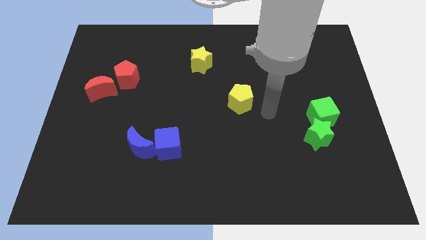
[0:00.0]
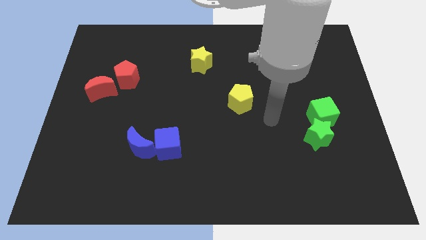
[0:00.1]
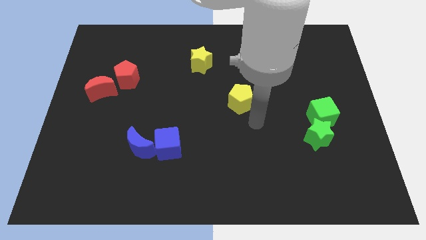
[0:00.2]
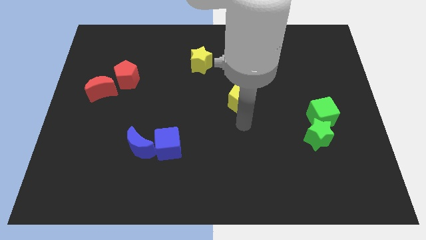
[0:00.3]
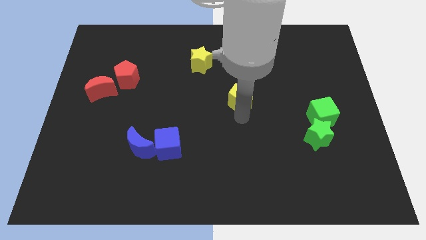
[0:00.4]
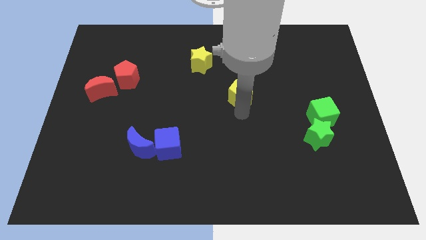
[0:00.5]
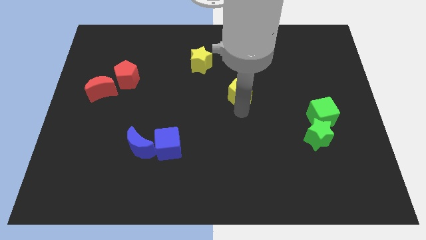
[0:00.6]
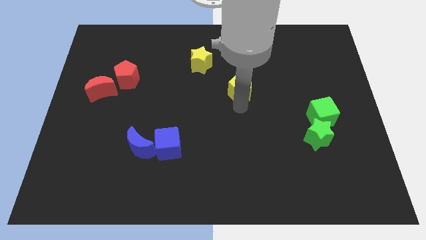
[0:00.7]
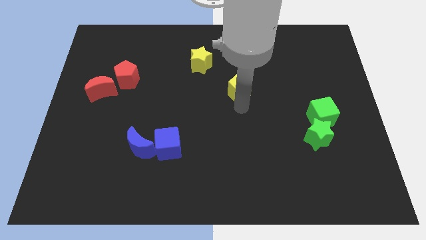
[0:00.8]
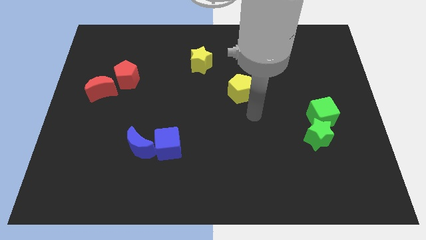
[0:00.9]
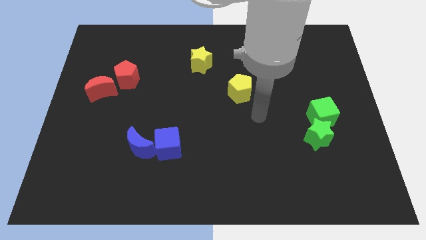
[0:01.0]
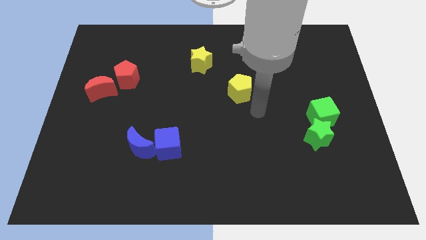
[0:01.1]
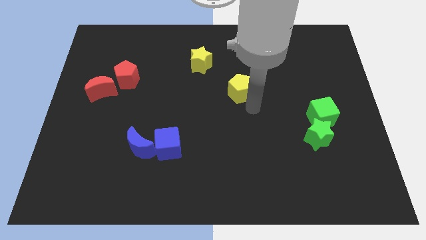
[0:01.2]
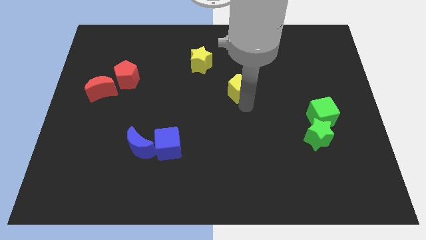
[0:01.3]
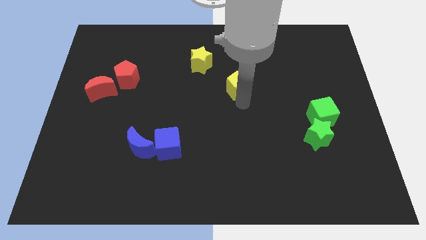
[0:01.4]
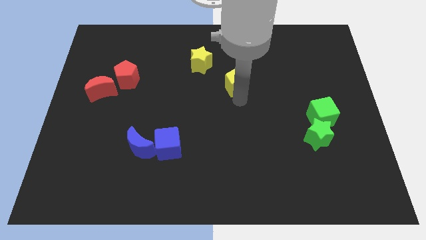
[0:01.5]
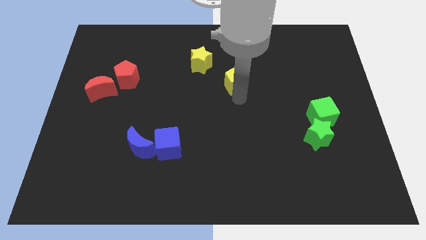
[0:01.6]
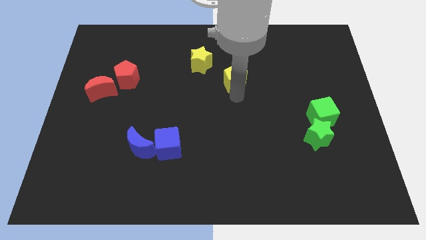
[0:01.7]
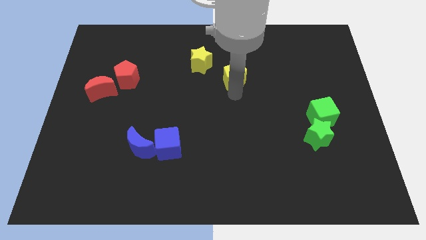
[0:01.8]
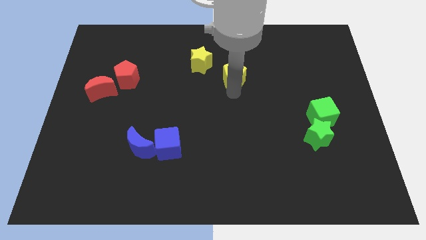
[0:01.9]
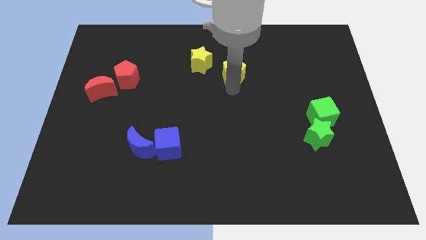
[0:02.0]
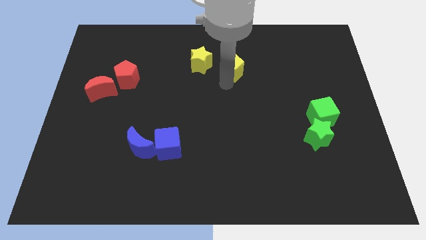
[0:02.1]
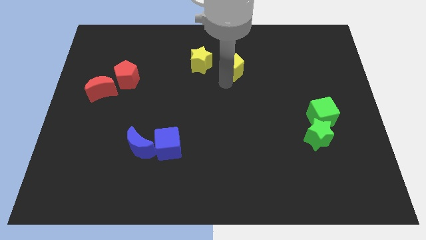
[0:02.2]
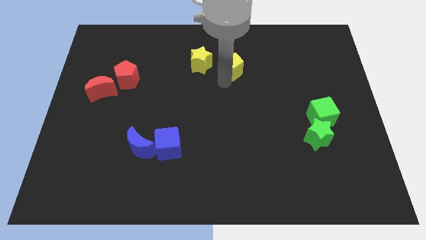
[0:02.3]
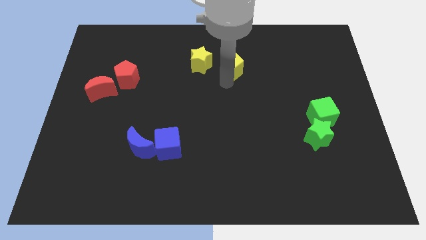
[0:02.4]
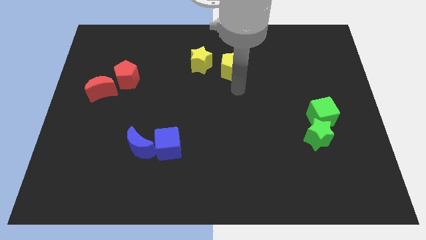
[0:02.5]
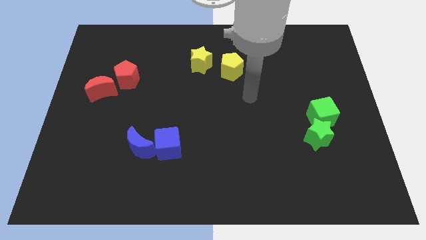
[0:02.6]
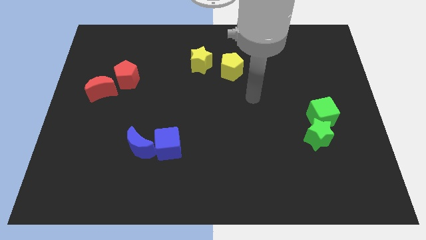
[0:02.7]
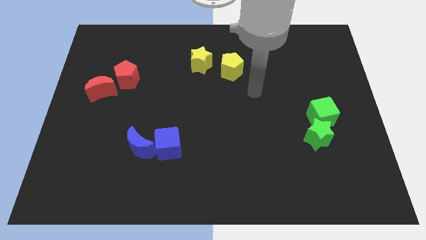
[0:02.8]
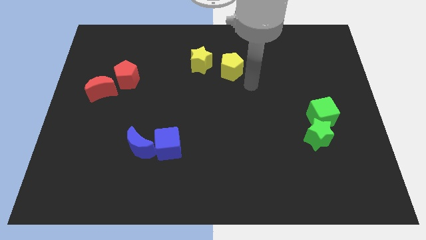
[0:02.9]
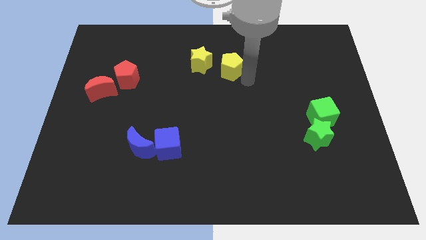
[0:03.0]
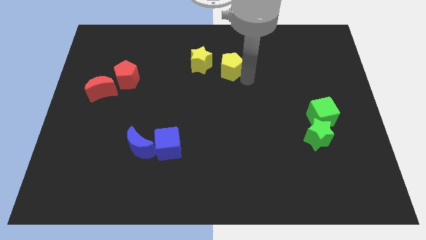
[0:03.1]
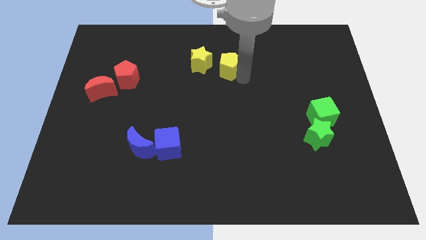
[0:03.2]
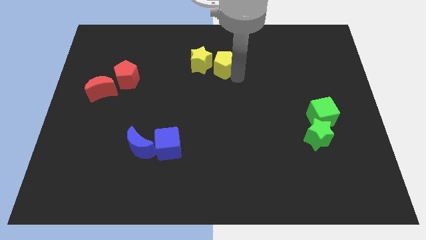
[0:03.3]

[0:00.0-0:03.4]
place the yellow pentagon at the right side of yellow star

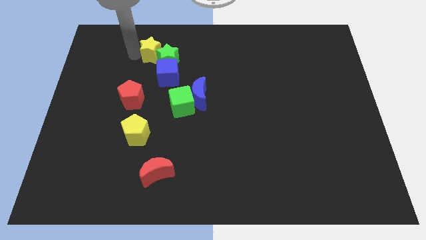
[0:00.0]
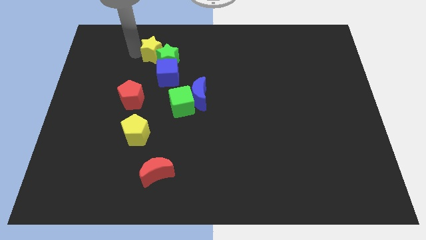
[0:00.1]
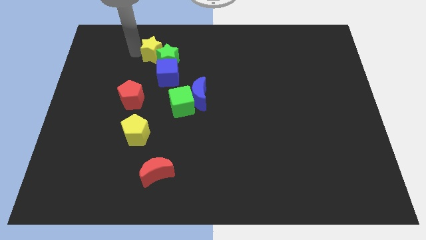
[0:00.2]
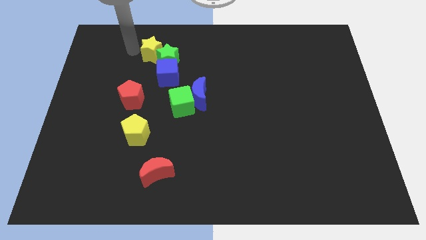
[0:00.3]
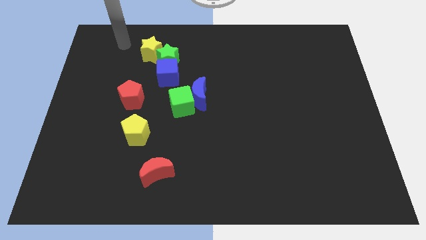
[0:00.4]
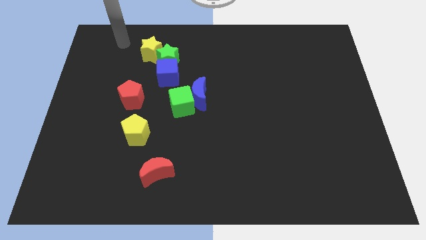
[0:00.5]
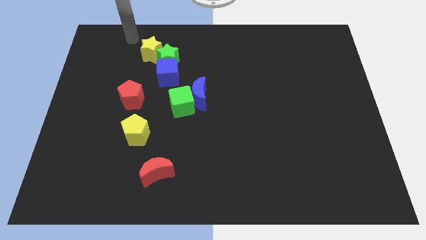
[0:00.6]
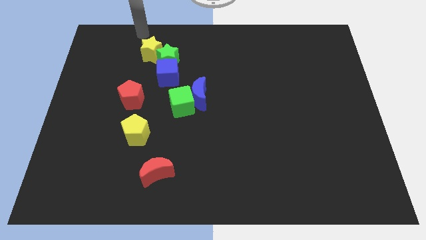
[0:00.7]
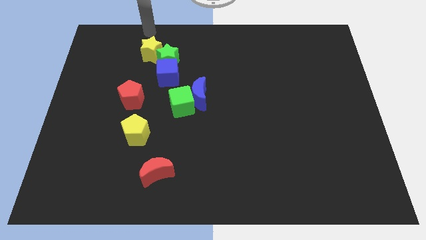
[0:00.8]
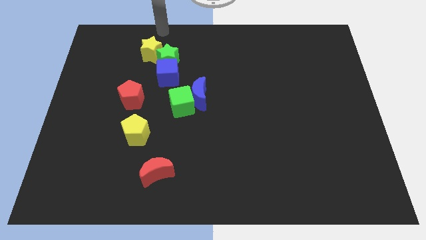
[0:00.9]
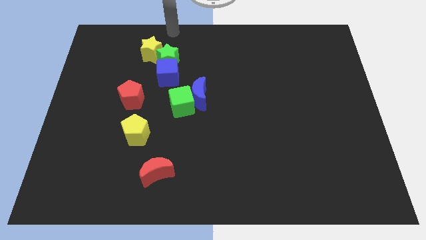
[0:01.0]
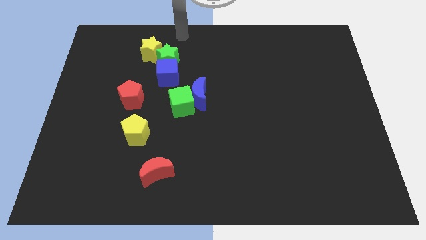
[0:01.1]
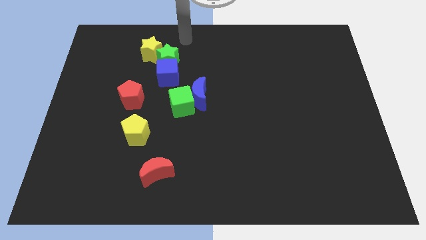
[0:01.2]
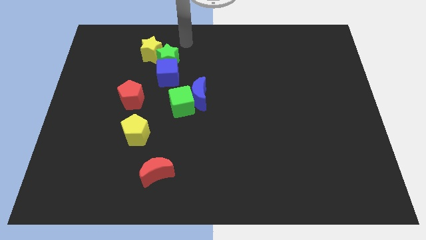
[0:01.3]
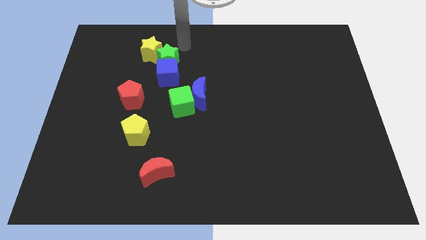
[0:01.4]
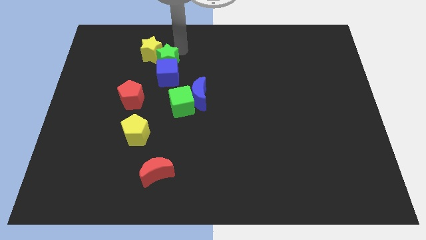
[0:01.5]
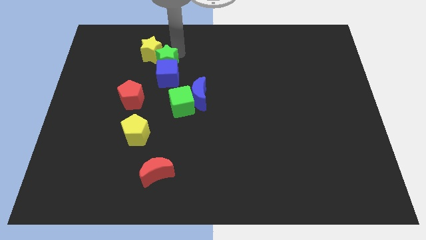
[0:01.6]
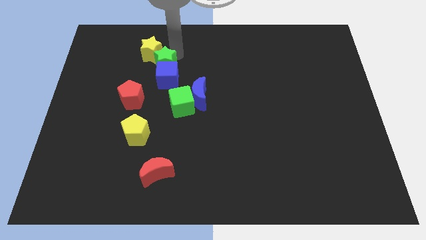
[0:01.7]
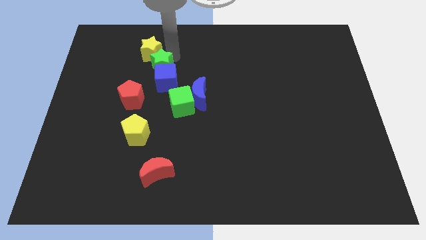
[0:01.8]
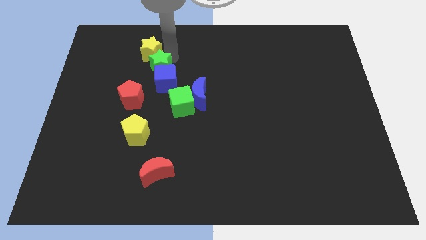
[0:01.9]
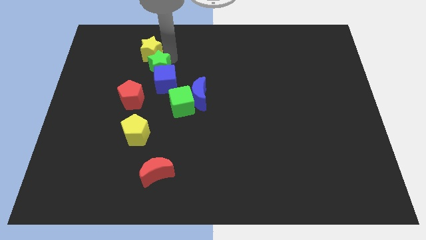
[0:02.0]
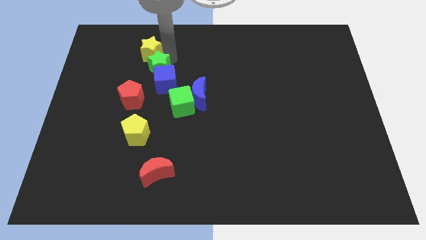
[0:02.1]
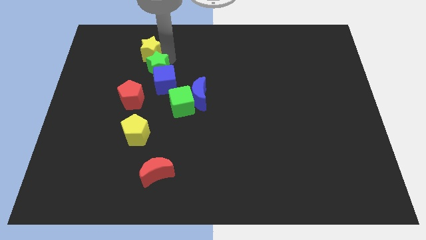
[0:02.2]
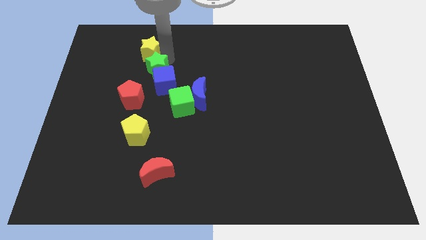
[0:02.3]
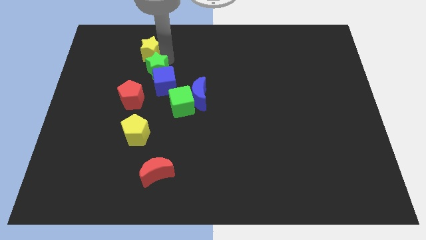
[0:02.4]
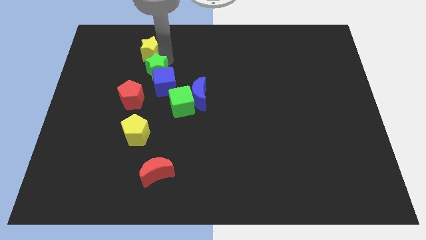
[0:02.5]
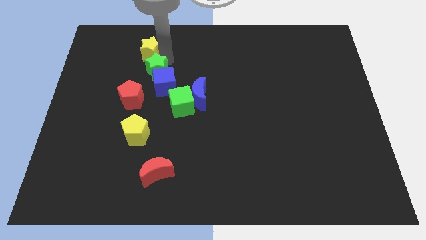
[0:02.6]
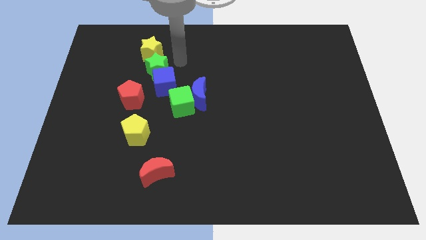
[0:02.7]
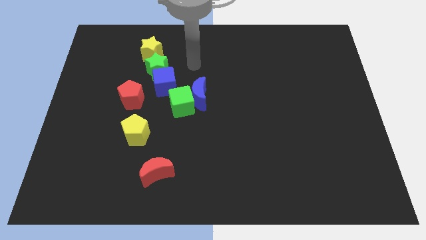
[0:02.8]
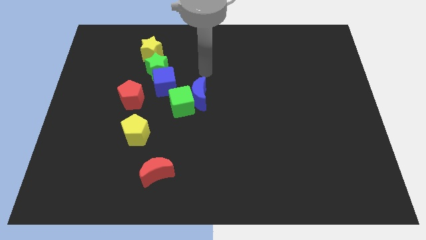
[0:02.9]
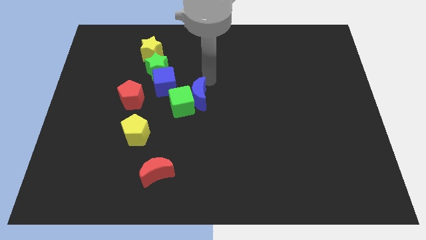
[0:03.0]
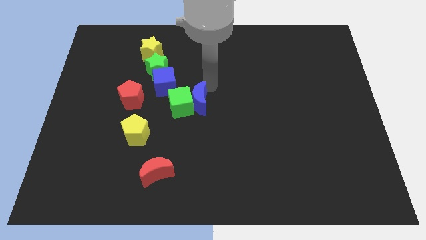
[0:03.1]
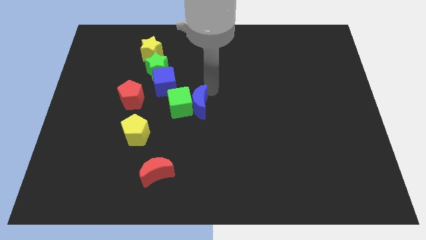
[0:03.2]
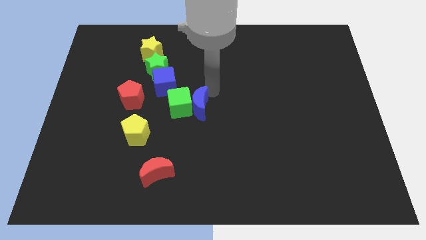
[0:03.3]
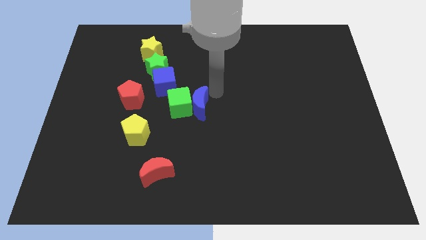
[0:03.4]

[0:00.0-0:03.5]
slightly push down the blue cube with a green star

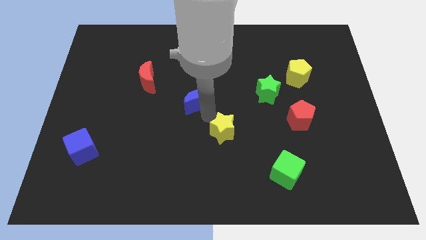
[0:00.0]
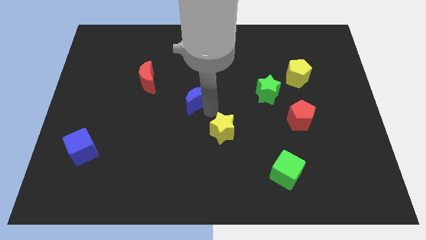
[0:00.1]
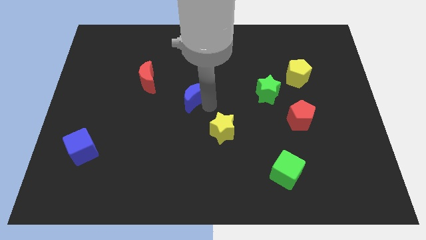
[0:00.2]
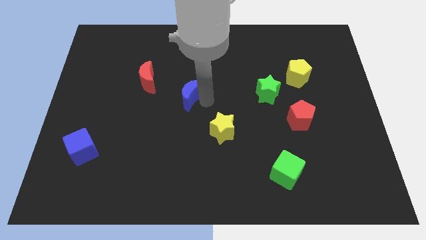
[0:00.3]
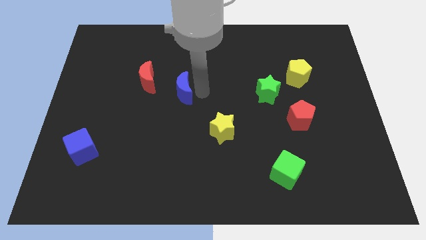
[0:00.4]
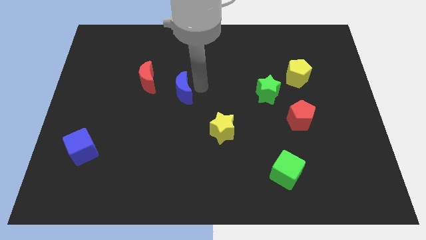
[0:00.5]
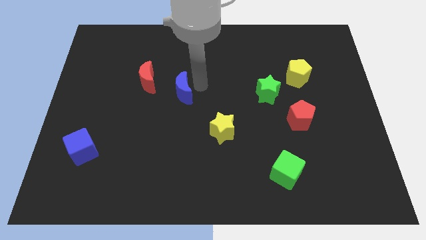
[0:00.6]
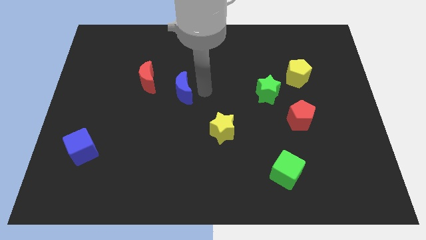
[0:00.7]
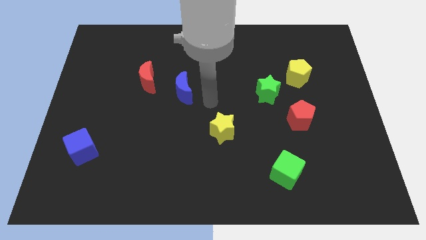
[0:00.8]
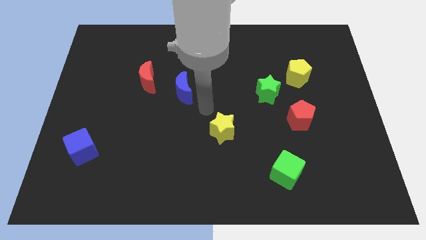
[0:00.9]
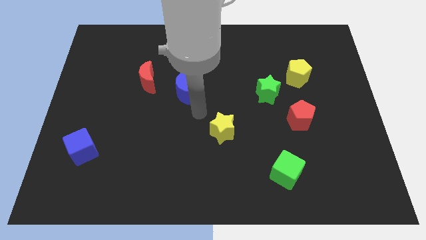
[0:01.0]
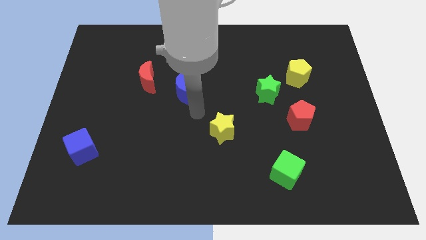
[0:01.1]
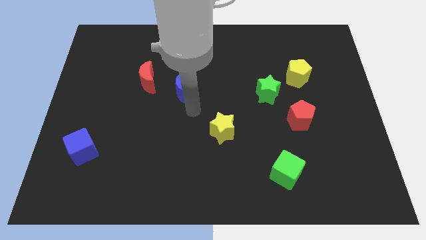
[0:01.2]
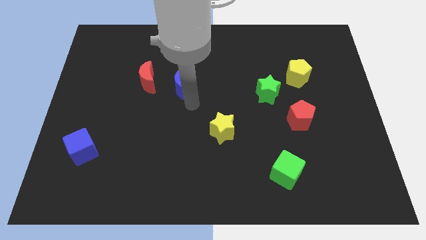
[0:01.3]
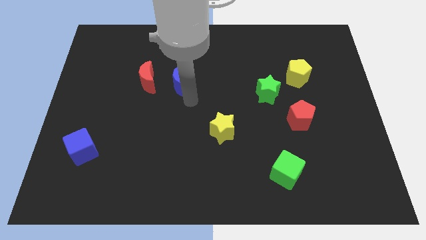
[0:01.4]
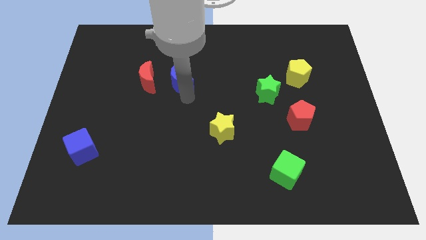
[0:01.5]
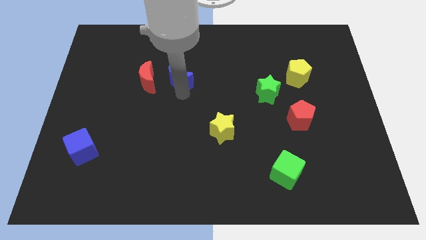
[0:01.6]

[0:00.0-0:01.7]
put the blue crescent to the right side of the red crescent

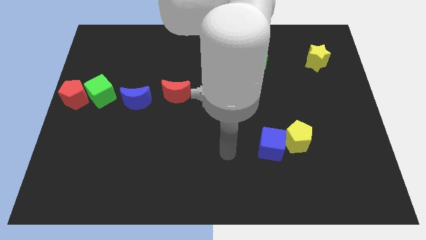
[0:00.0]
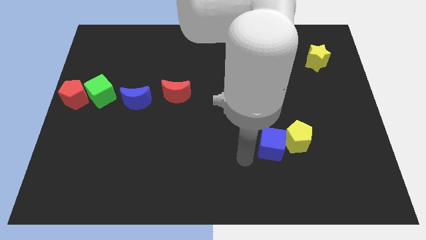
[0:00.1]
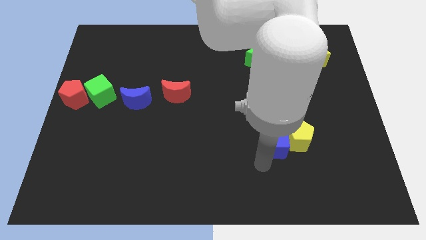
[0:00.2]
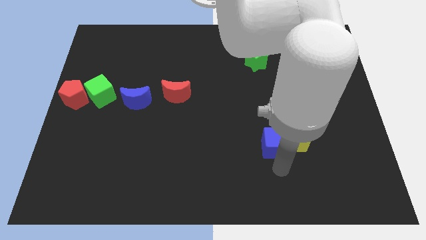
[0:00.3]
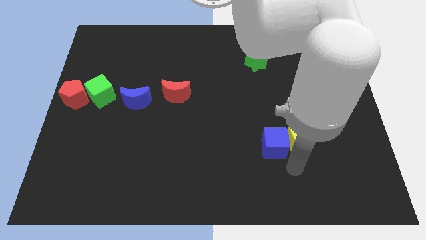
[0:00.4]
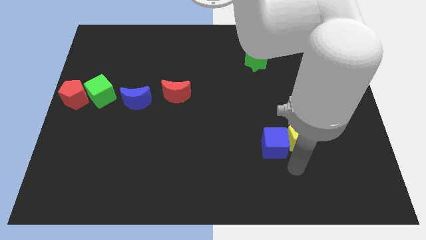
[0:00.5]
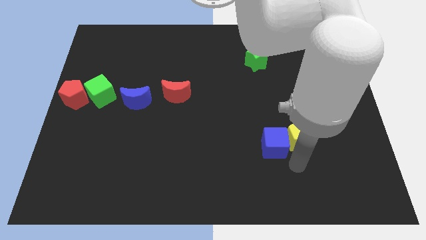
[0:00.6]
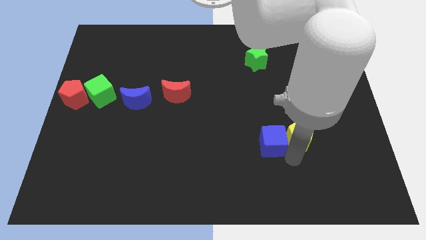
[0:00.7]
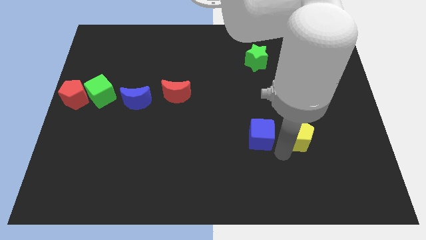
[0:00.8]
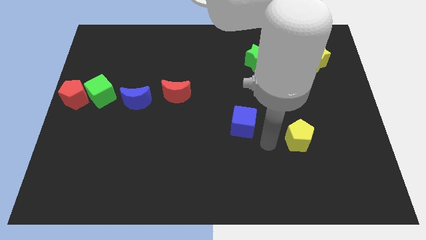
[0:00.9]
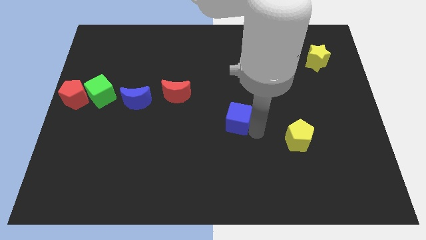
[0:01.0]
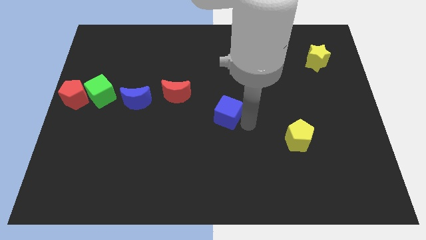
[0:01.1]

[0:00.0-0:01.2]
push blue cube slightly upwards
